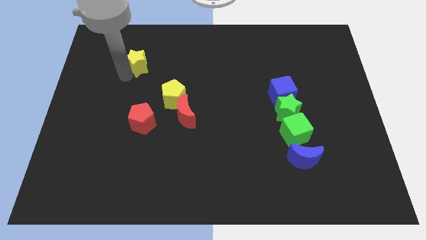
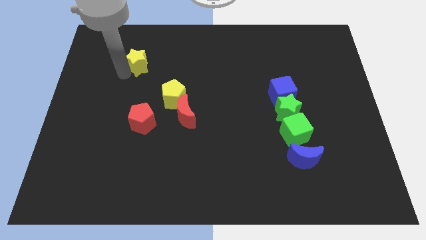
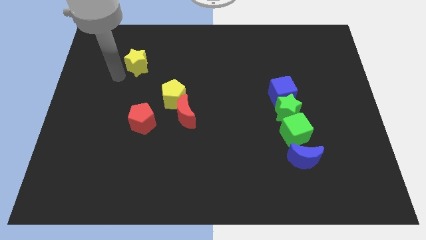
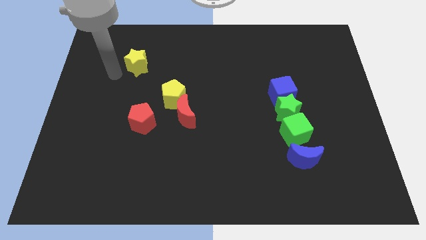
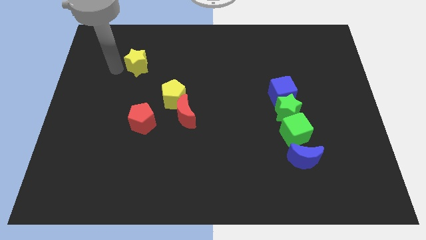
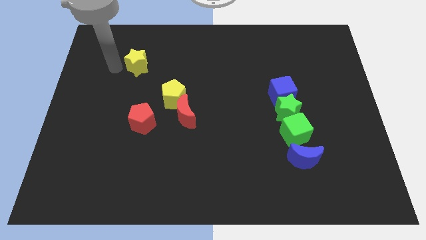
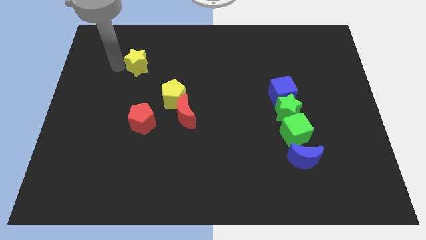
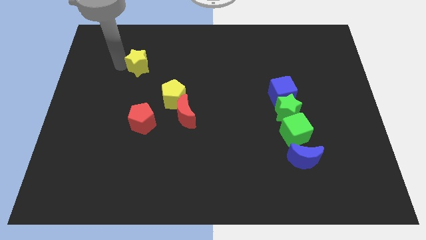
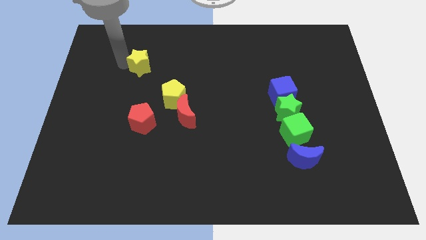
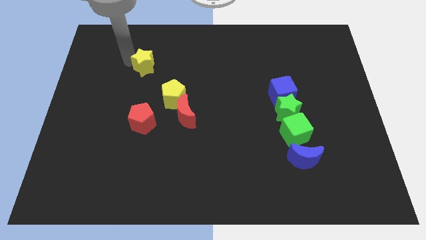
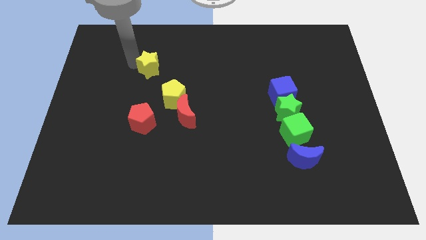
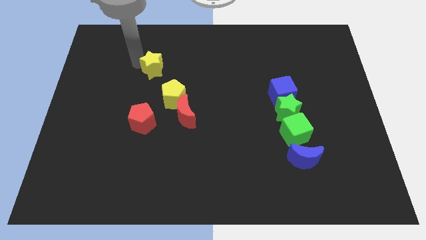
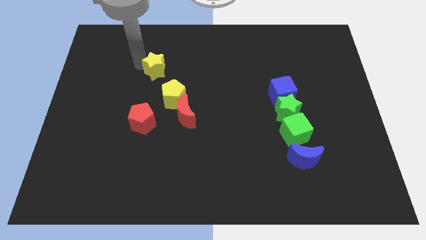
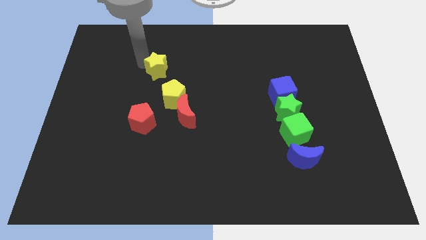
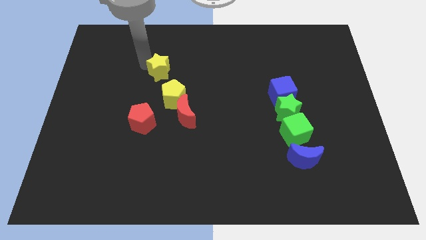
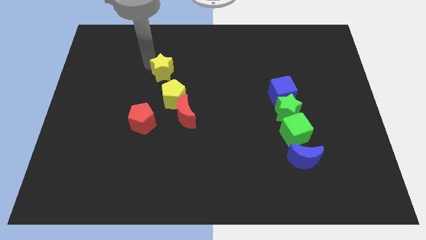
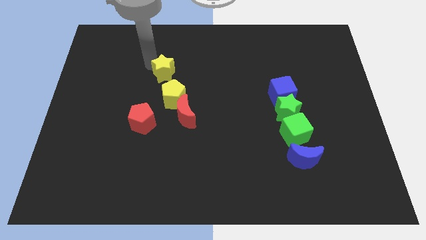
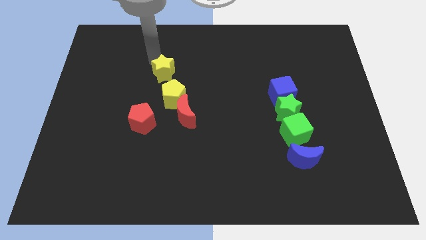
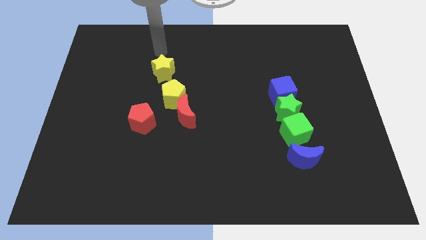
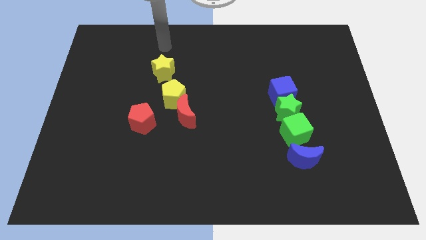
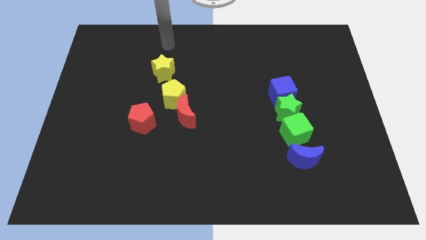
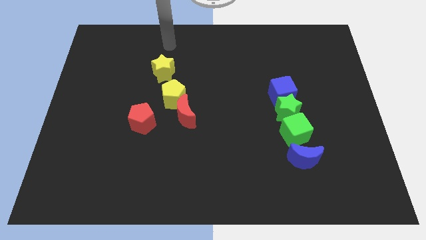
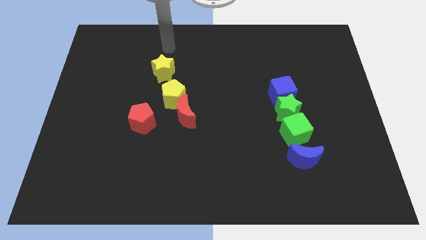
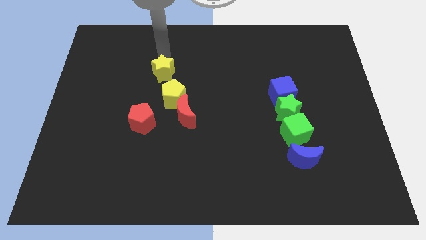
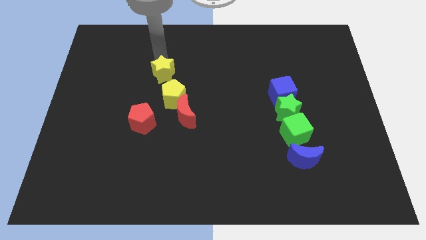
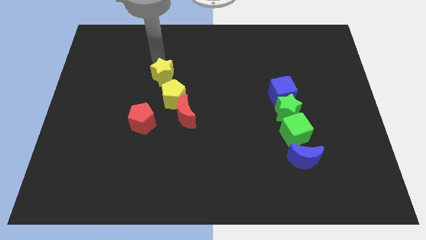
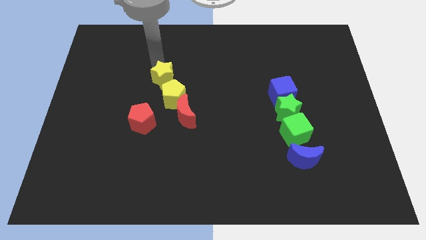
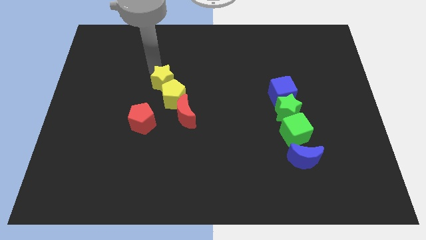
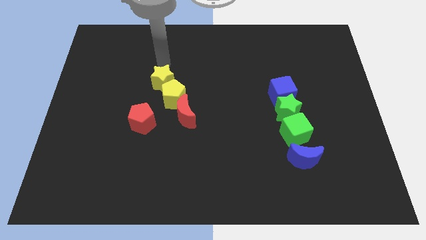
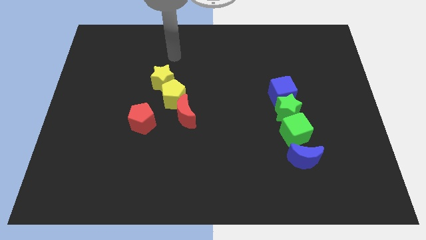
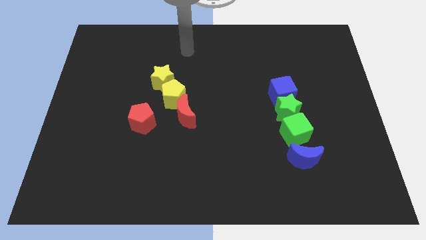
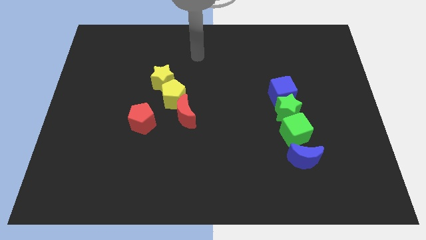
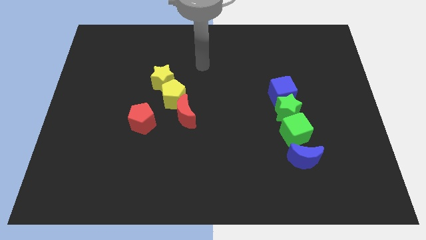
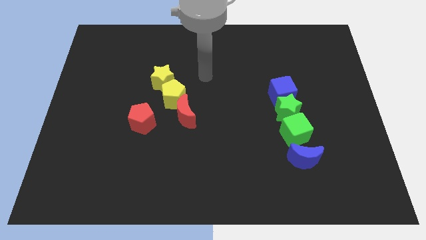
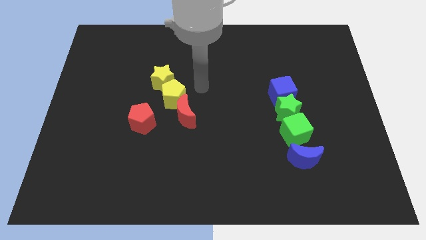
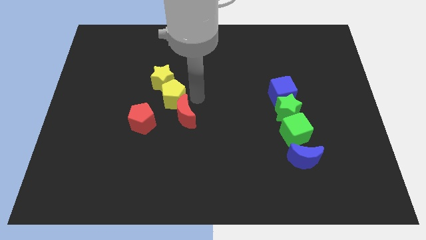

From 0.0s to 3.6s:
place the yellow star on top of the yellow pentagon

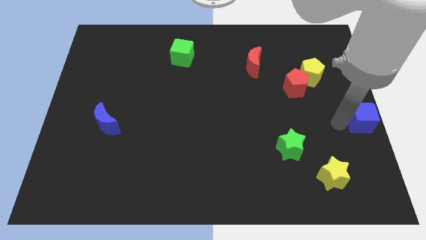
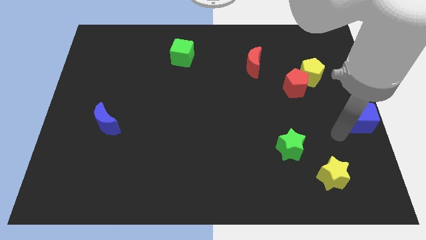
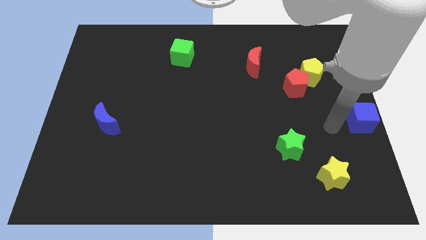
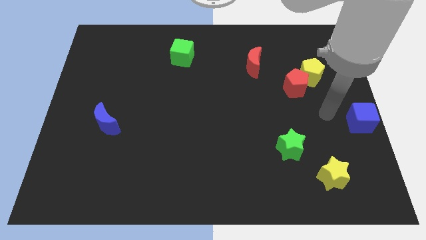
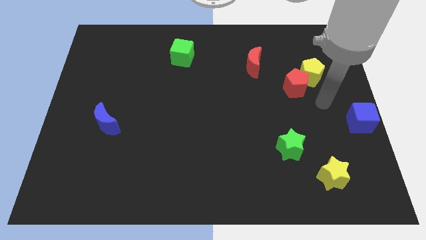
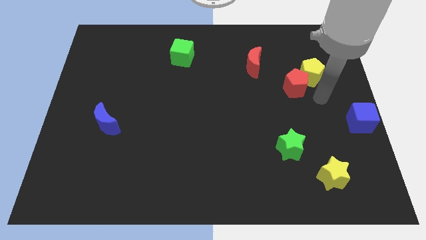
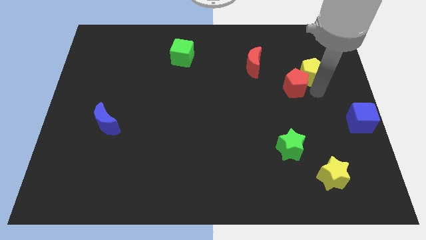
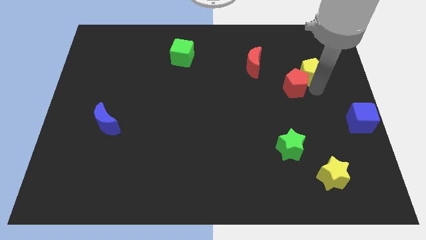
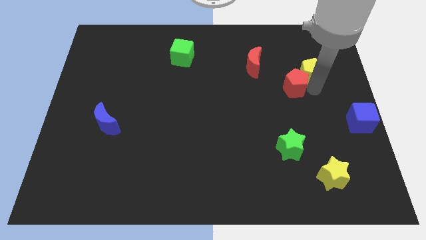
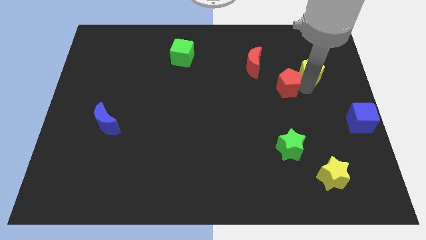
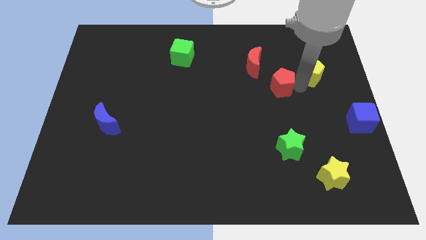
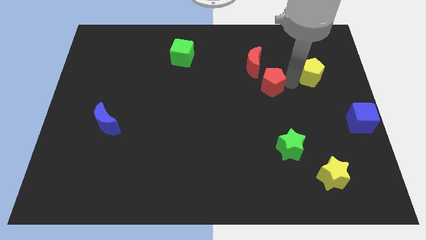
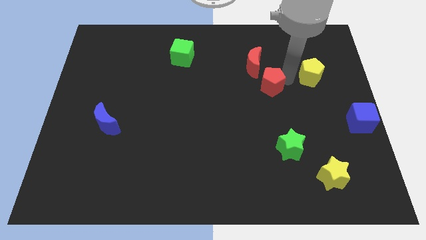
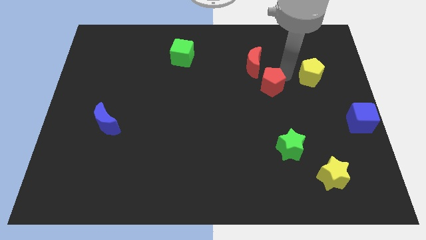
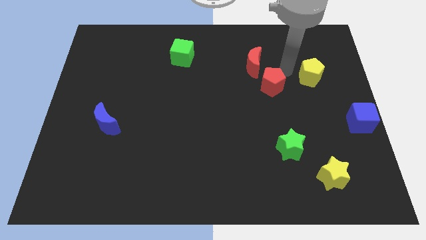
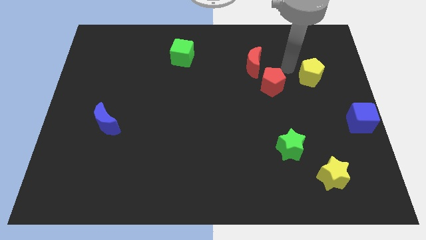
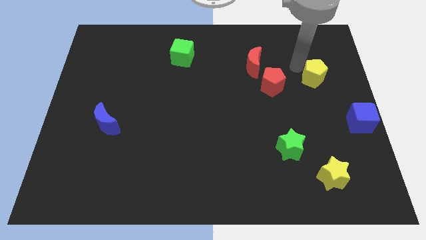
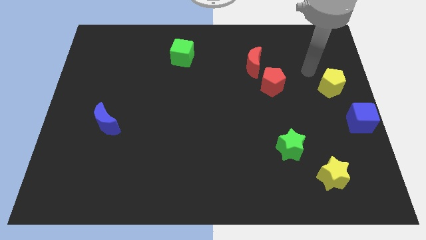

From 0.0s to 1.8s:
separate red pentagon from the yellow pentagon

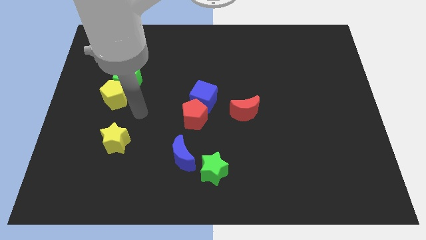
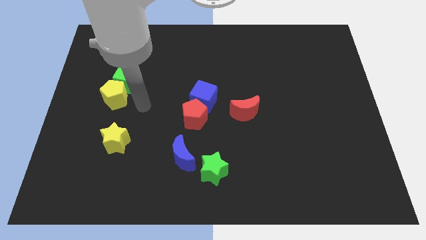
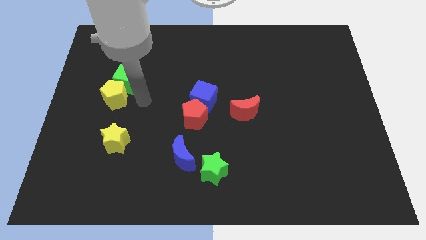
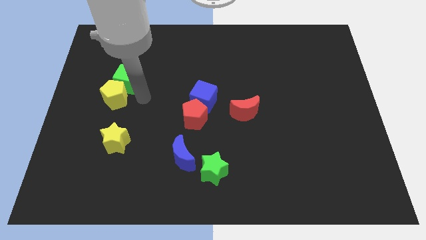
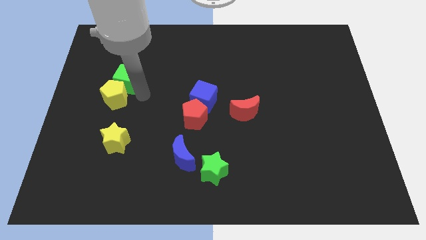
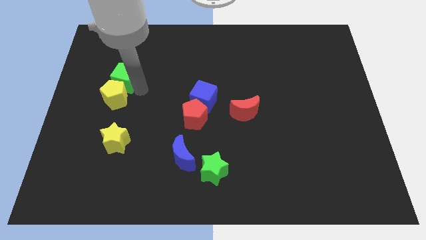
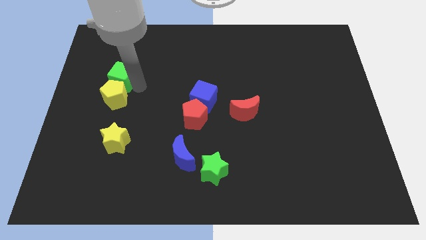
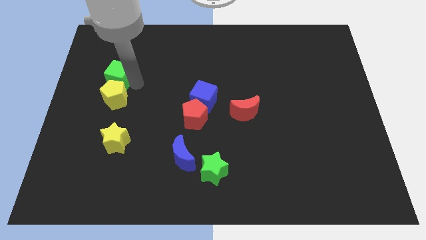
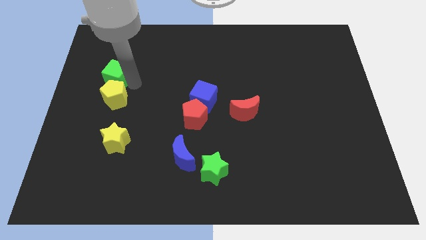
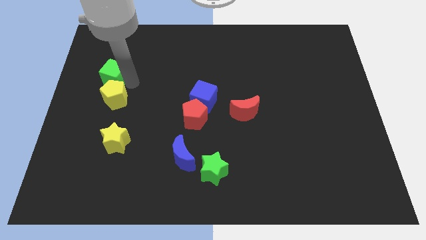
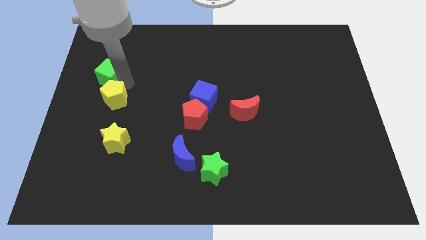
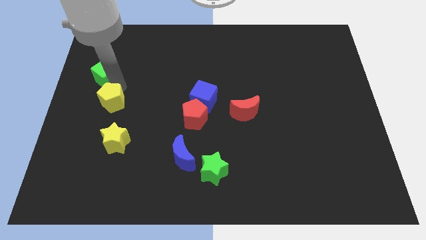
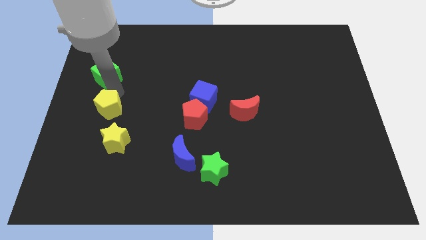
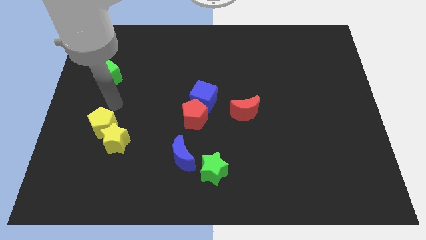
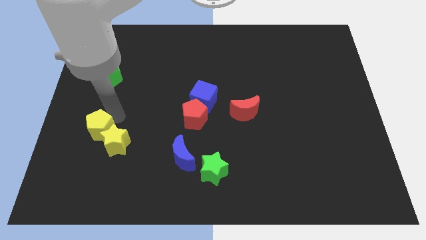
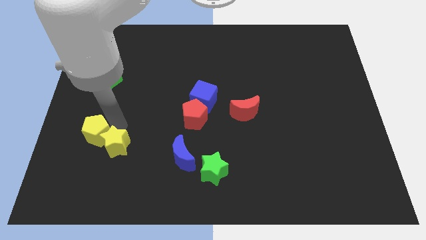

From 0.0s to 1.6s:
place the yellow pentagon to the left side of the yellow star

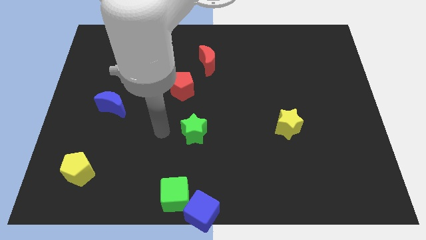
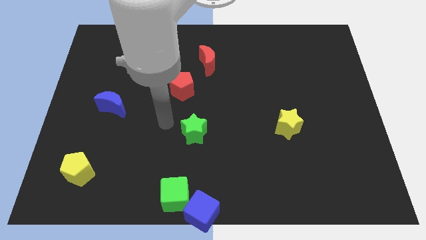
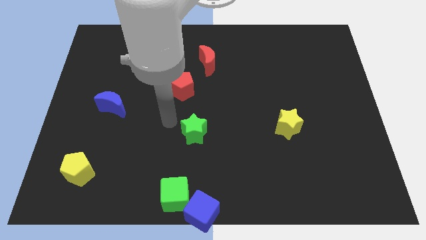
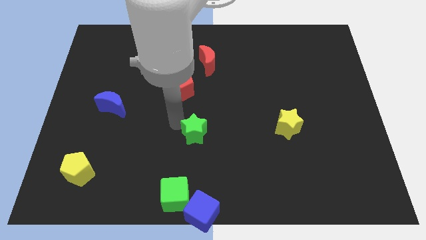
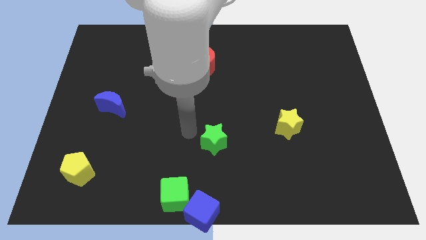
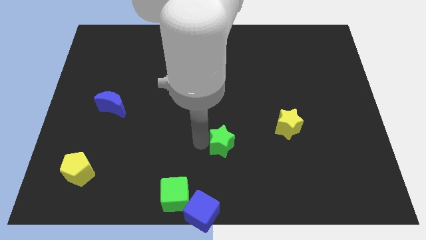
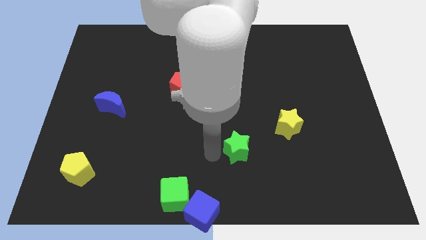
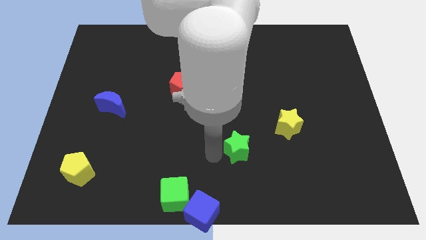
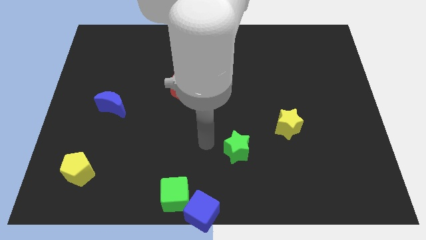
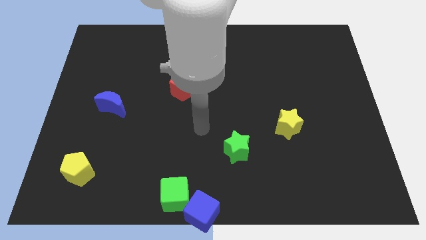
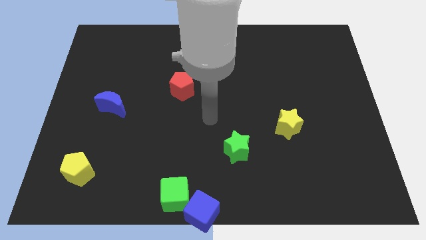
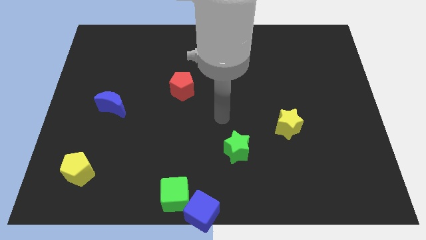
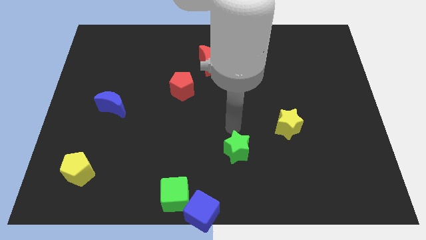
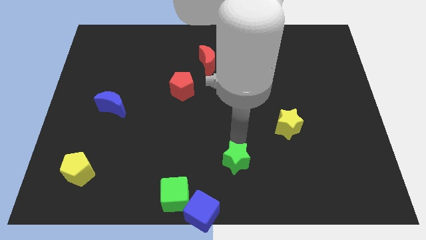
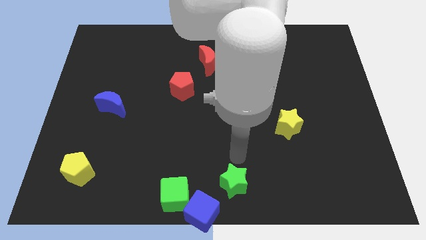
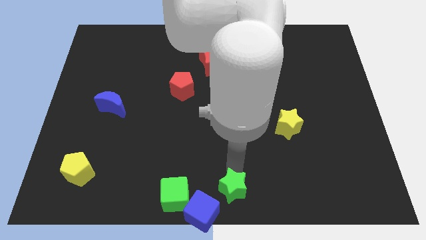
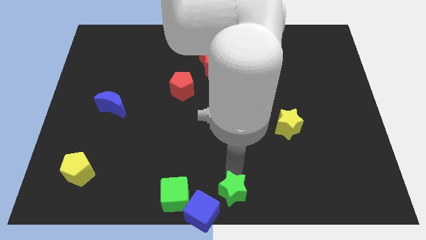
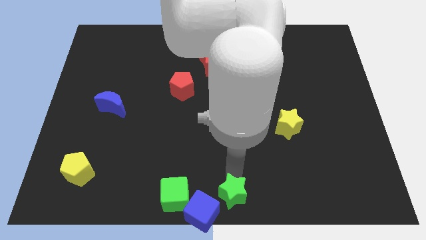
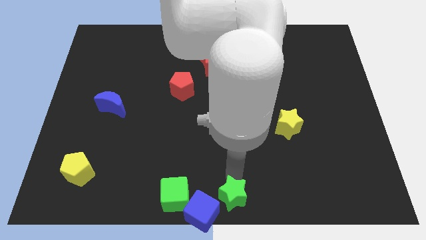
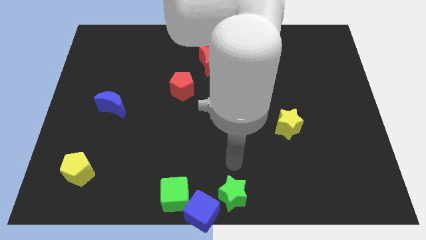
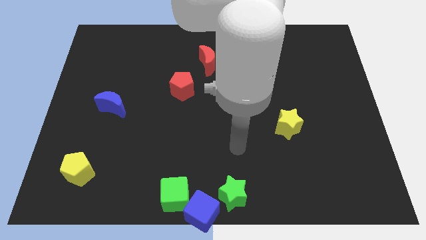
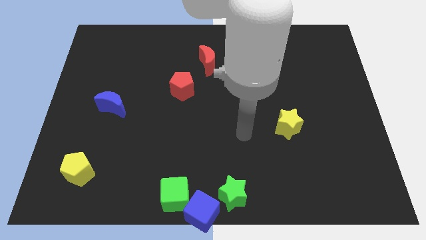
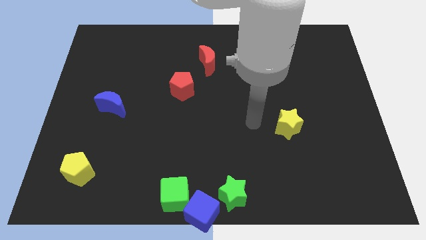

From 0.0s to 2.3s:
move the green star towards the bottom of the board
